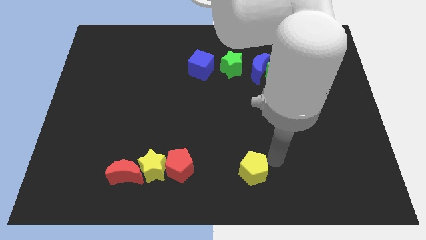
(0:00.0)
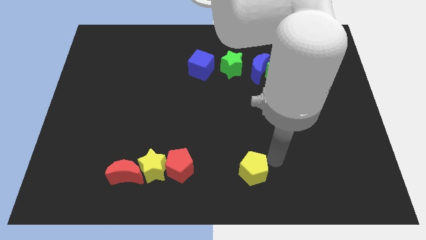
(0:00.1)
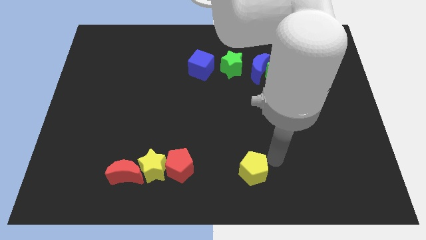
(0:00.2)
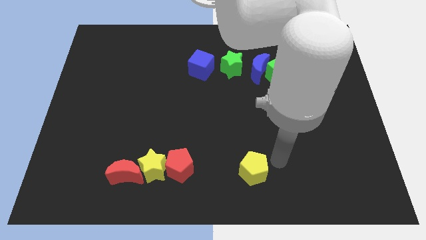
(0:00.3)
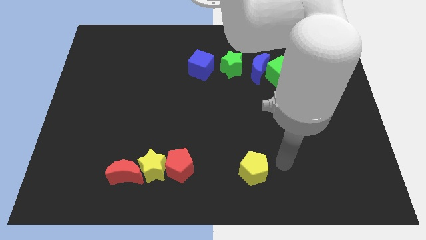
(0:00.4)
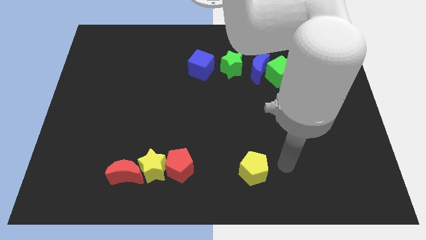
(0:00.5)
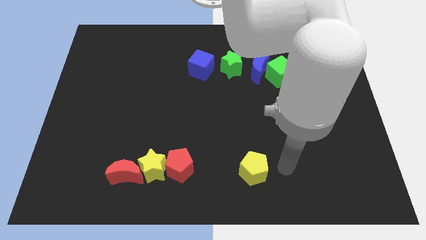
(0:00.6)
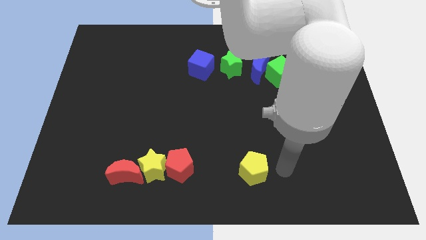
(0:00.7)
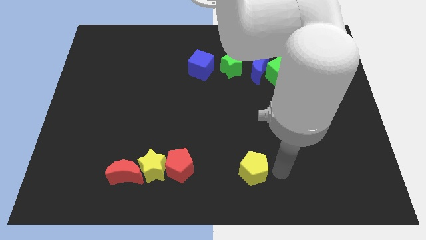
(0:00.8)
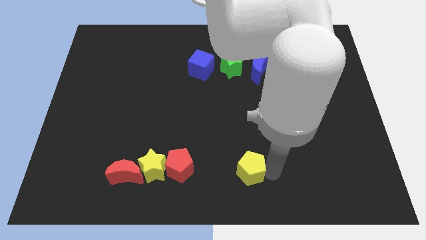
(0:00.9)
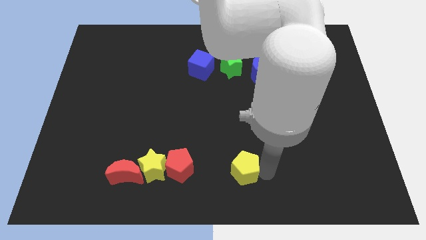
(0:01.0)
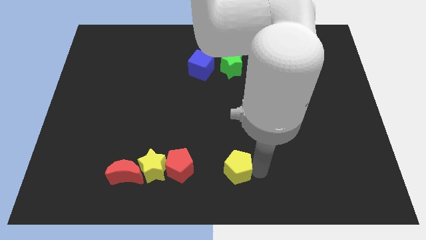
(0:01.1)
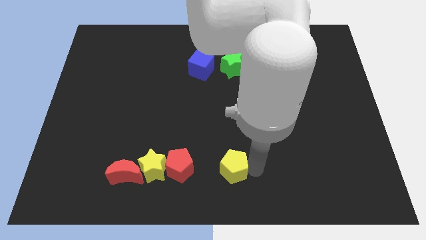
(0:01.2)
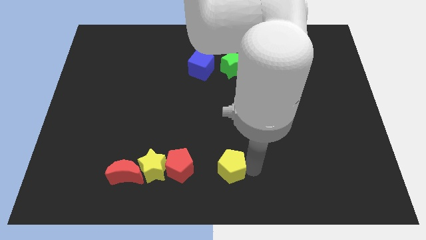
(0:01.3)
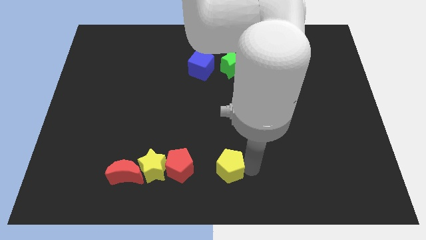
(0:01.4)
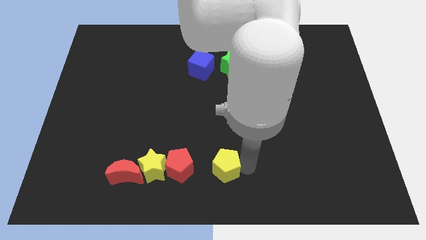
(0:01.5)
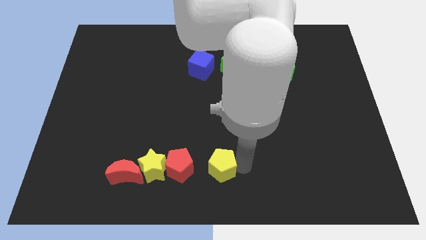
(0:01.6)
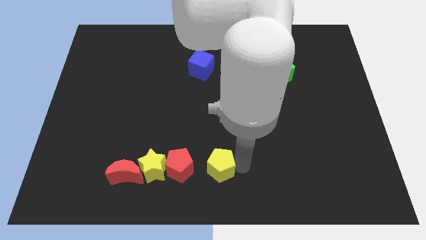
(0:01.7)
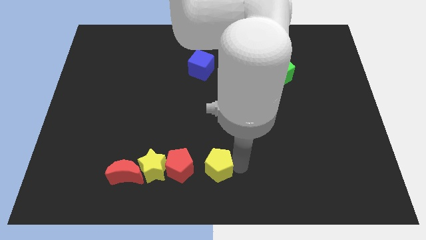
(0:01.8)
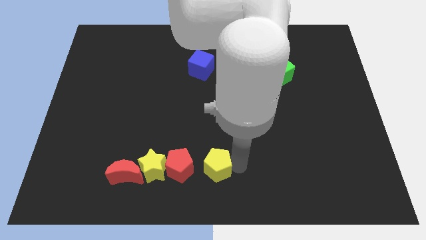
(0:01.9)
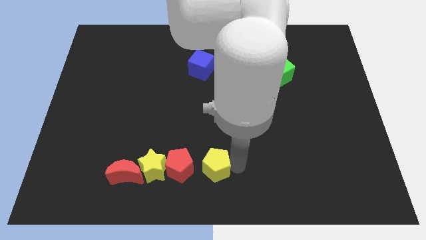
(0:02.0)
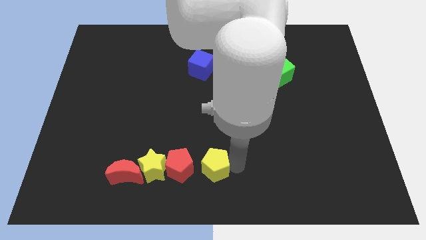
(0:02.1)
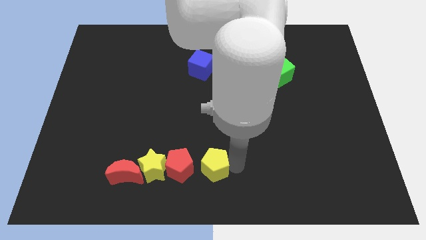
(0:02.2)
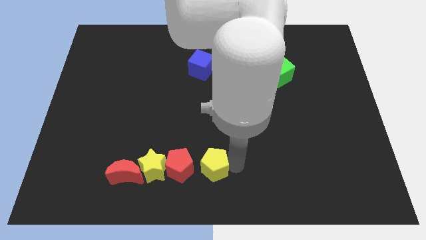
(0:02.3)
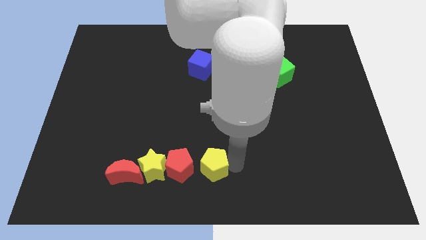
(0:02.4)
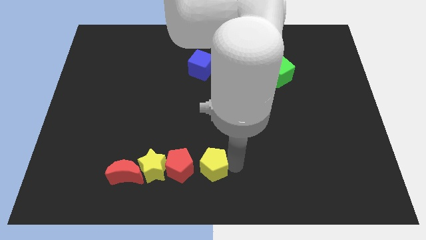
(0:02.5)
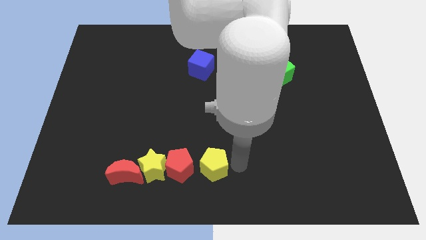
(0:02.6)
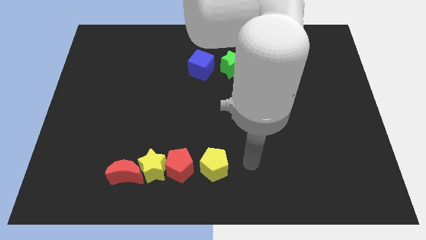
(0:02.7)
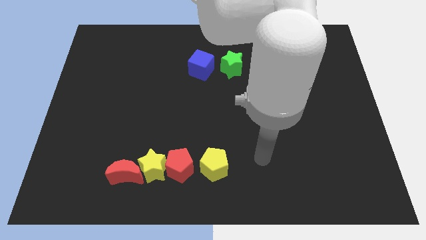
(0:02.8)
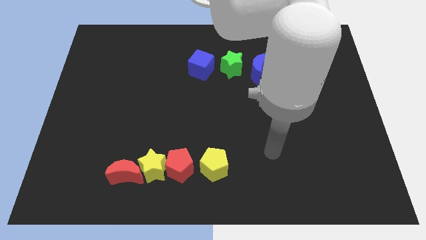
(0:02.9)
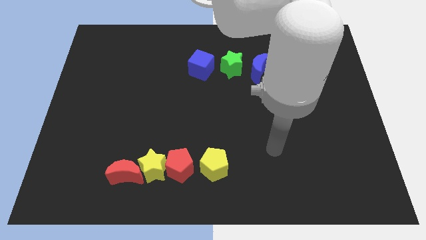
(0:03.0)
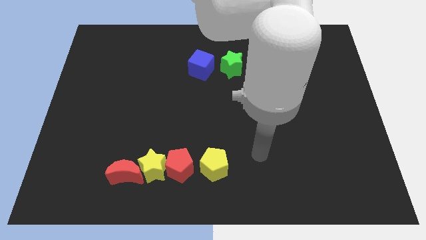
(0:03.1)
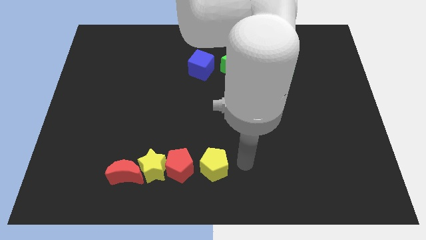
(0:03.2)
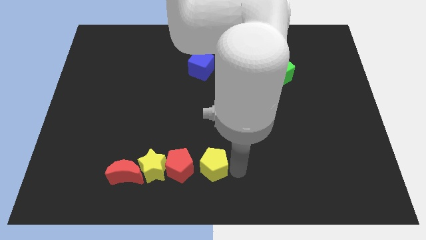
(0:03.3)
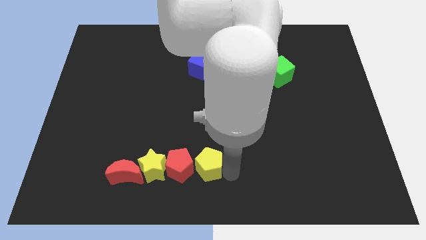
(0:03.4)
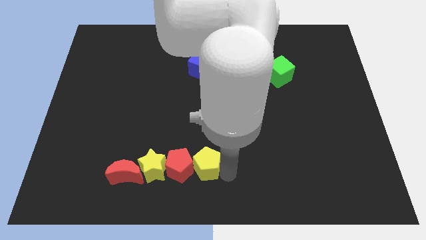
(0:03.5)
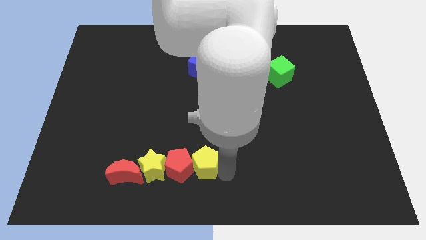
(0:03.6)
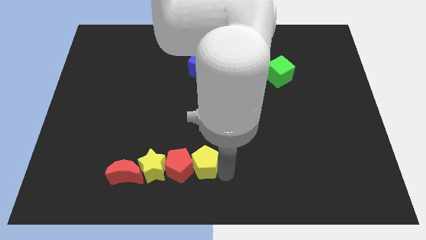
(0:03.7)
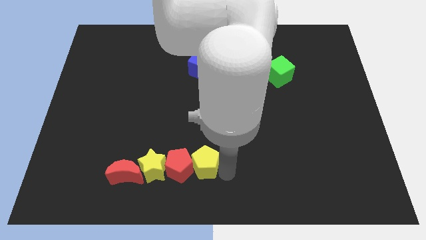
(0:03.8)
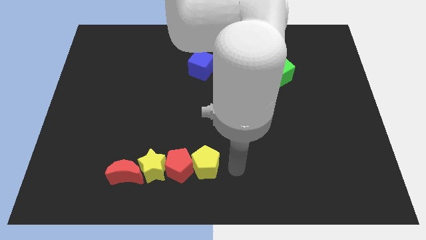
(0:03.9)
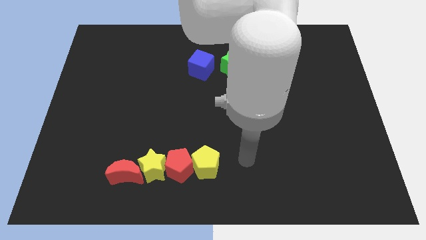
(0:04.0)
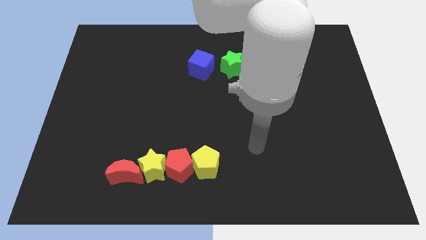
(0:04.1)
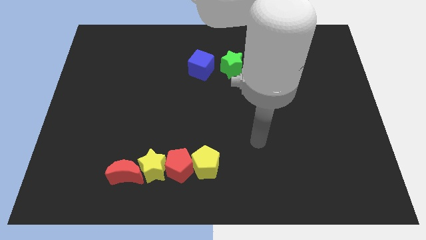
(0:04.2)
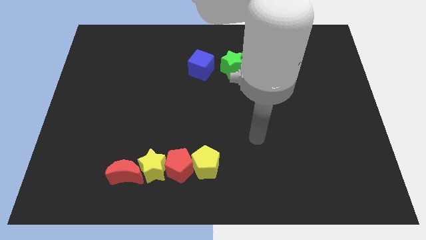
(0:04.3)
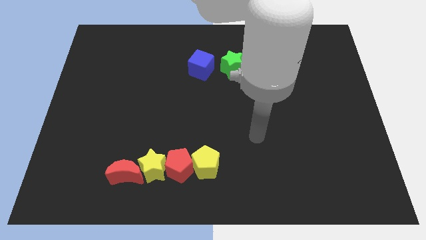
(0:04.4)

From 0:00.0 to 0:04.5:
push the yellow pentagon into the red pentagon

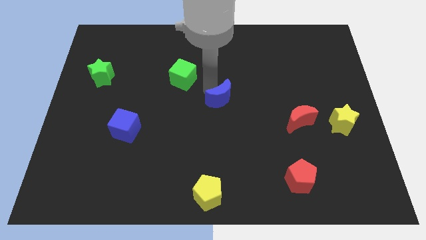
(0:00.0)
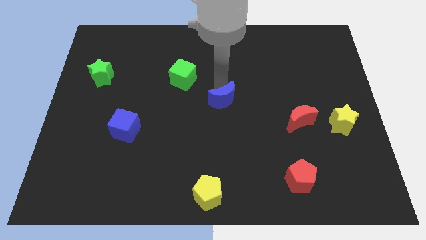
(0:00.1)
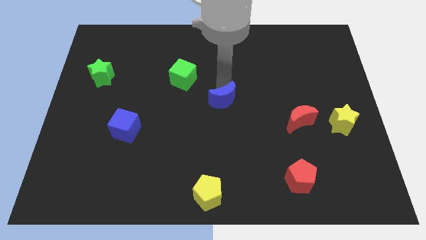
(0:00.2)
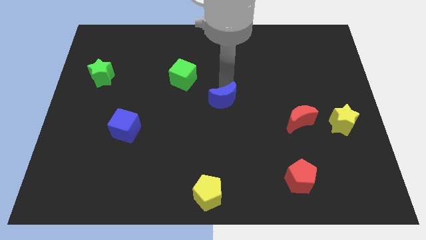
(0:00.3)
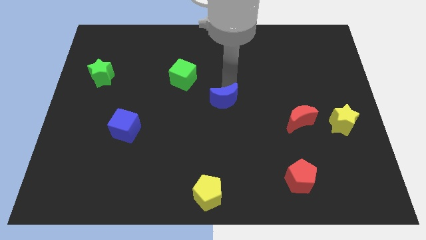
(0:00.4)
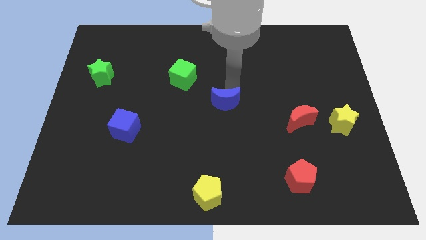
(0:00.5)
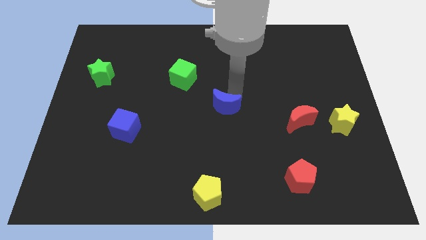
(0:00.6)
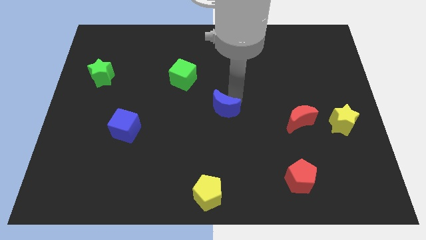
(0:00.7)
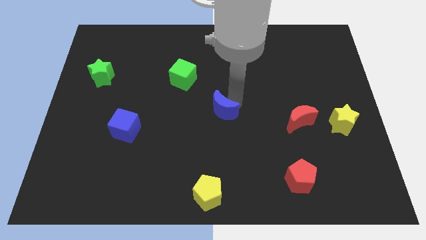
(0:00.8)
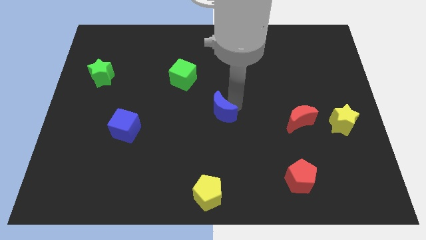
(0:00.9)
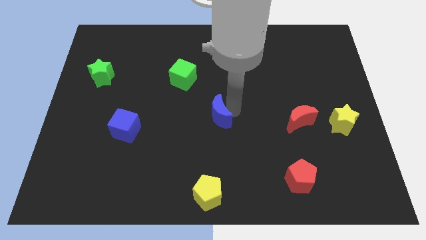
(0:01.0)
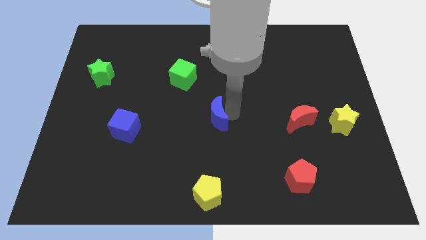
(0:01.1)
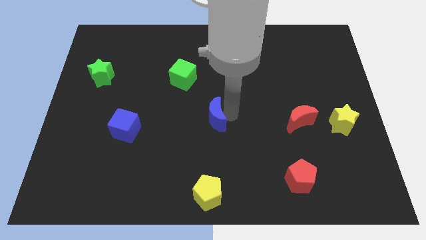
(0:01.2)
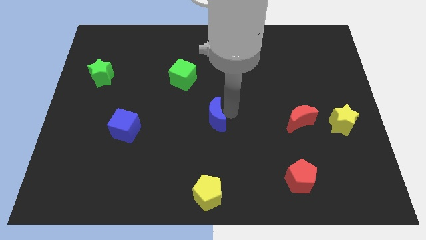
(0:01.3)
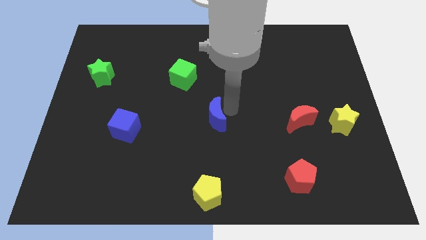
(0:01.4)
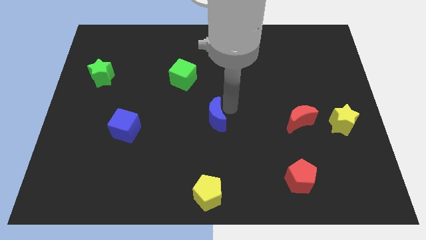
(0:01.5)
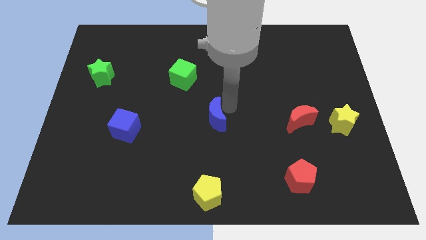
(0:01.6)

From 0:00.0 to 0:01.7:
move the blue crescent to the center of board

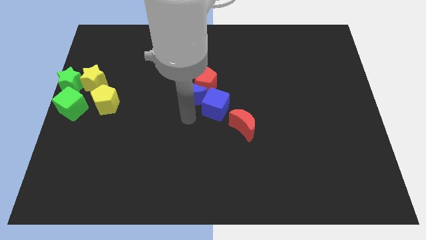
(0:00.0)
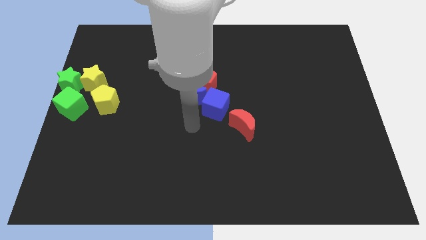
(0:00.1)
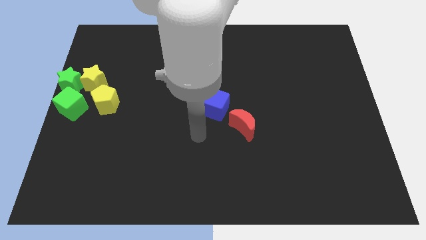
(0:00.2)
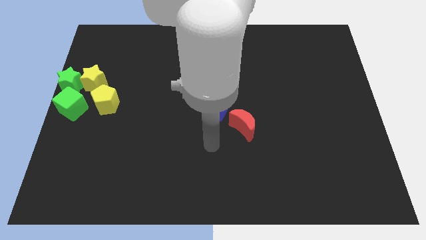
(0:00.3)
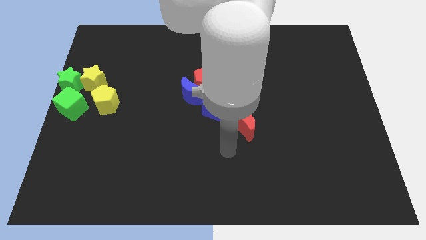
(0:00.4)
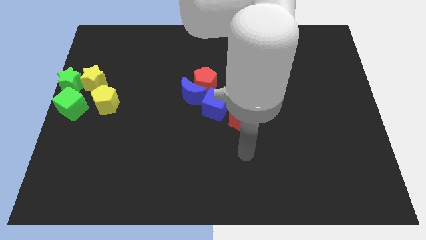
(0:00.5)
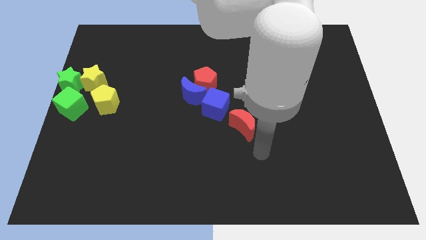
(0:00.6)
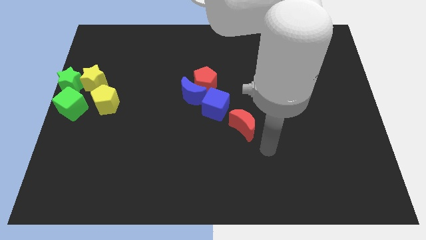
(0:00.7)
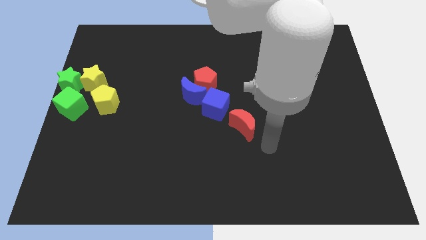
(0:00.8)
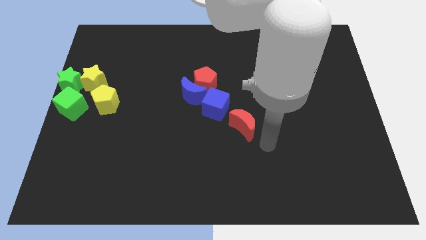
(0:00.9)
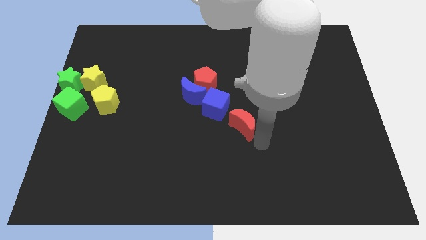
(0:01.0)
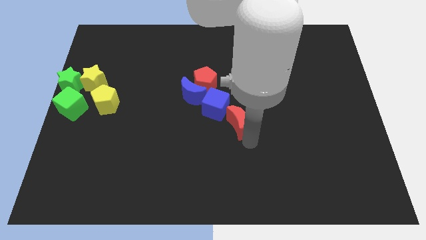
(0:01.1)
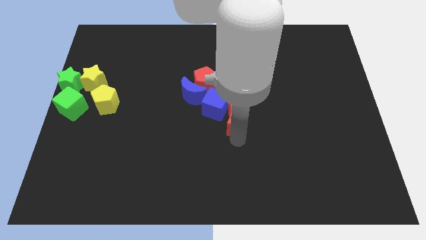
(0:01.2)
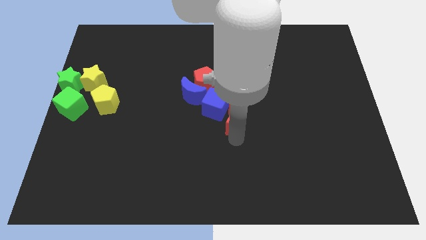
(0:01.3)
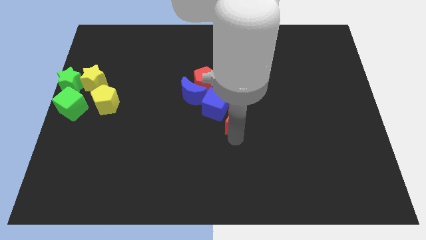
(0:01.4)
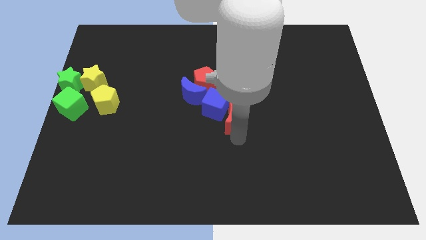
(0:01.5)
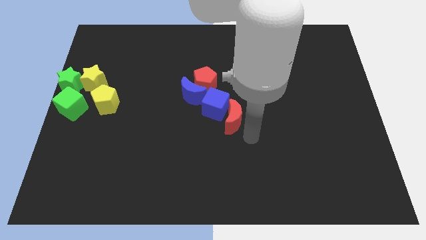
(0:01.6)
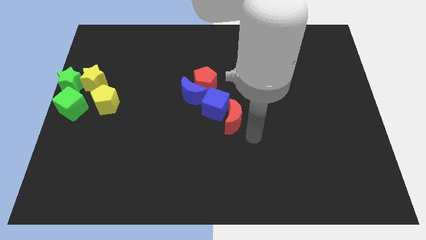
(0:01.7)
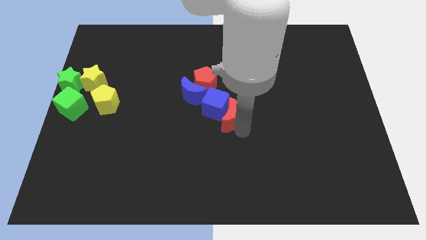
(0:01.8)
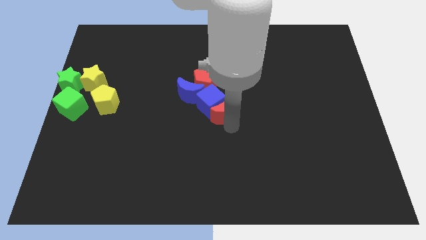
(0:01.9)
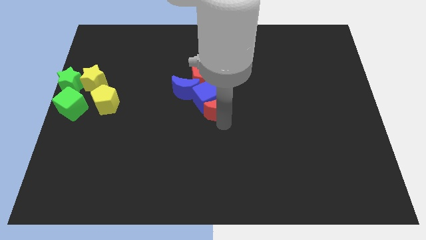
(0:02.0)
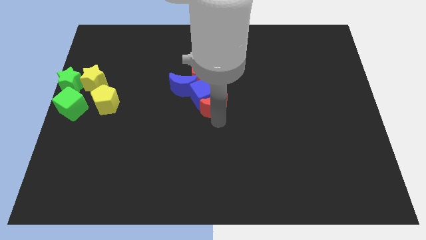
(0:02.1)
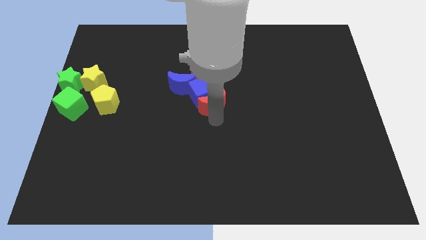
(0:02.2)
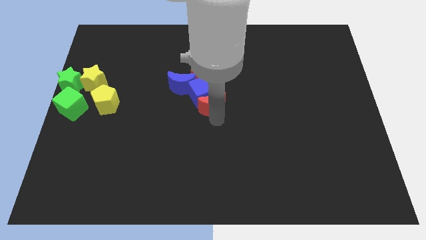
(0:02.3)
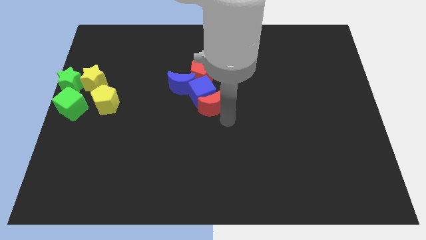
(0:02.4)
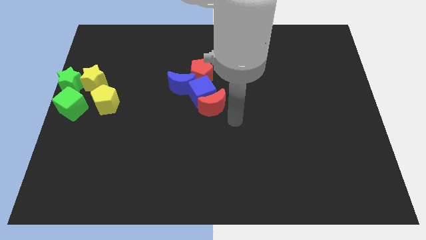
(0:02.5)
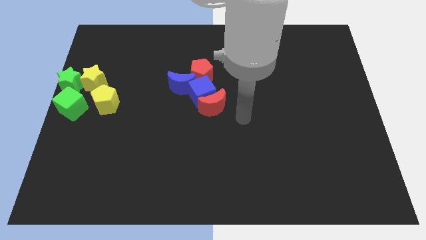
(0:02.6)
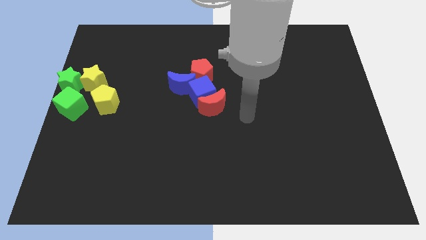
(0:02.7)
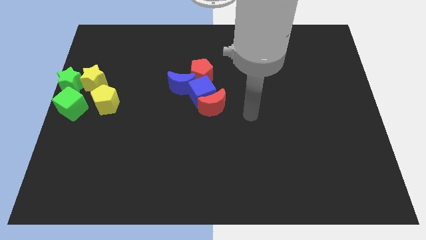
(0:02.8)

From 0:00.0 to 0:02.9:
move the red crescent into the group of block which is at the centre of board

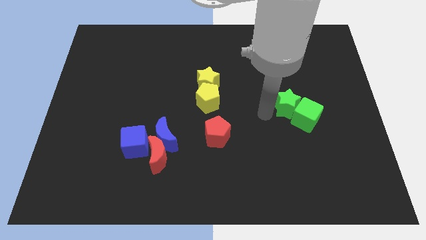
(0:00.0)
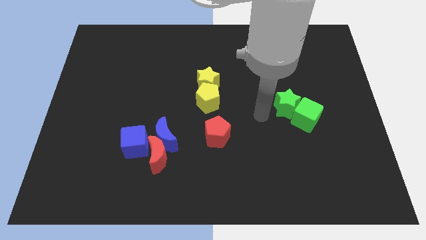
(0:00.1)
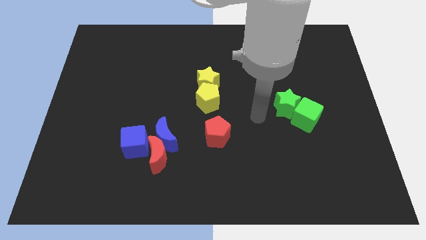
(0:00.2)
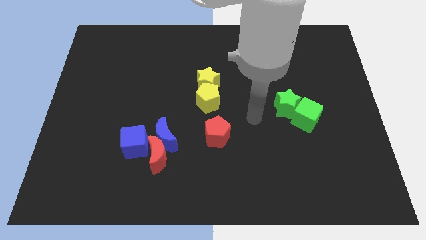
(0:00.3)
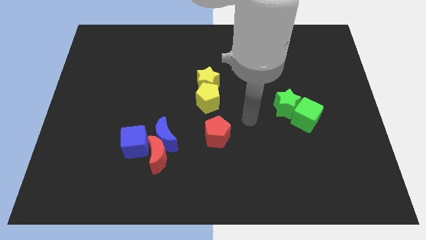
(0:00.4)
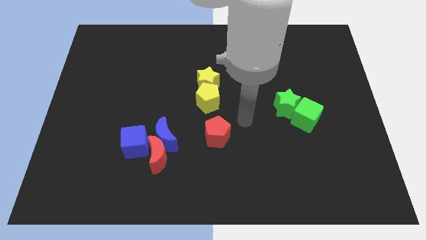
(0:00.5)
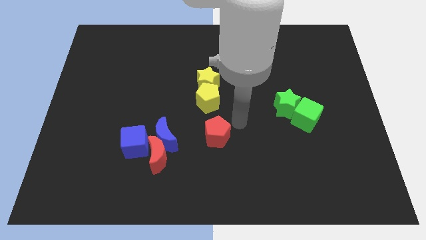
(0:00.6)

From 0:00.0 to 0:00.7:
move the arm towards the red pentagon
